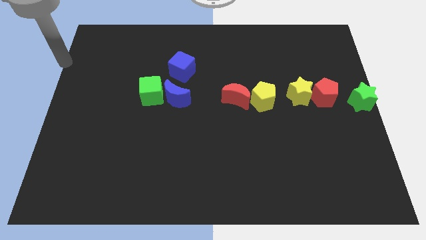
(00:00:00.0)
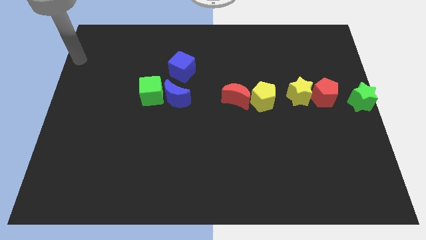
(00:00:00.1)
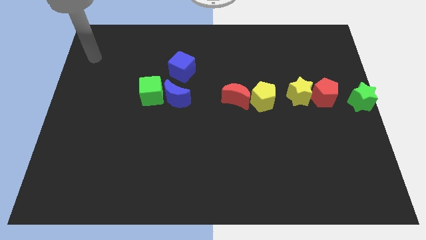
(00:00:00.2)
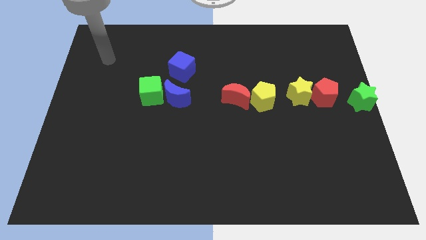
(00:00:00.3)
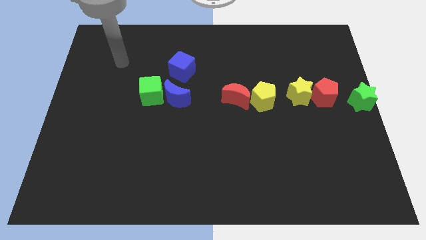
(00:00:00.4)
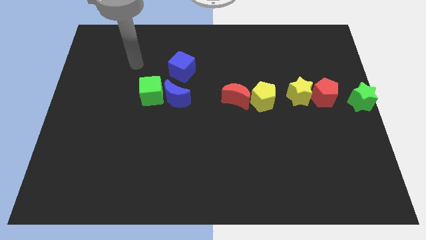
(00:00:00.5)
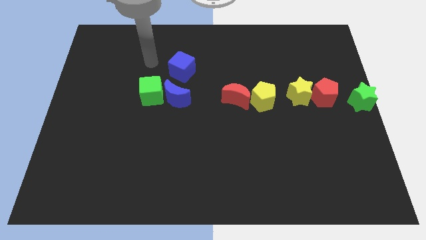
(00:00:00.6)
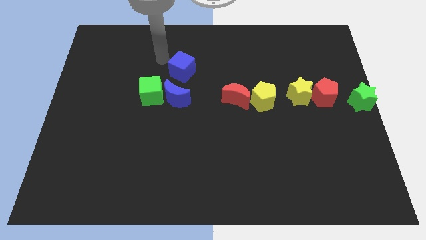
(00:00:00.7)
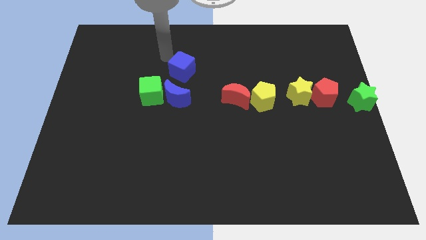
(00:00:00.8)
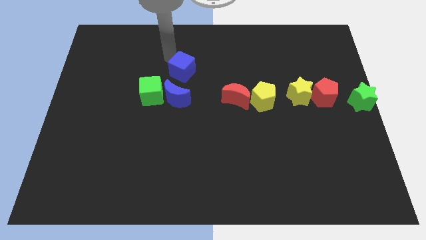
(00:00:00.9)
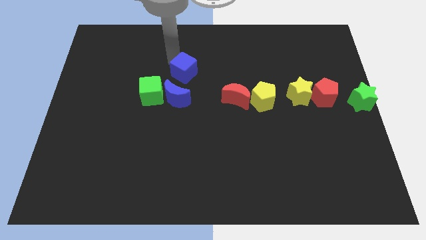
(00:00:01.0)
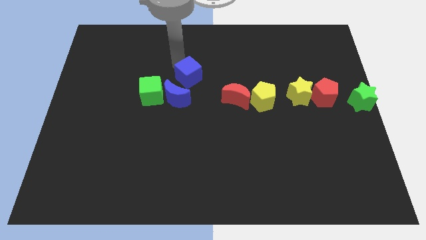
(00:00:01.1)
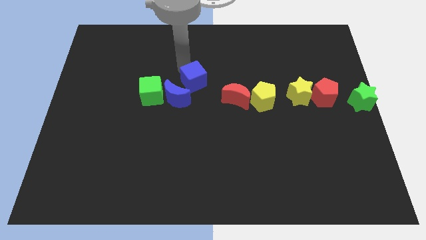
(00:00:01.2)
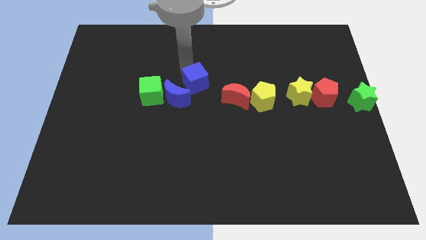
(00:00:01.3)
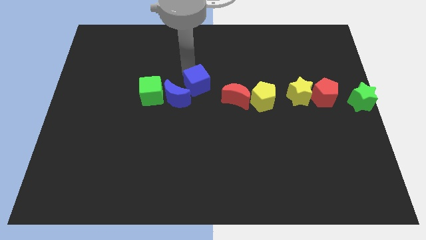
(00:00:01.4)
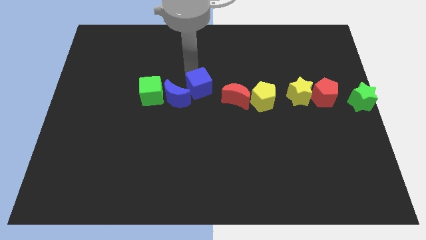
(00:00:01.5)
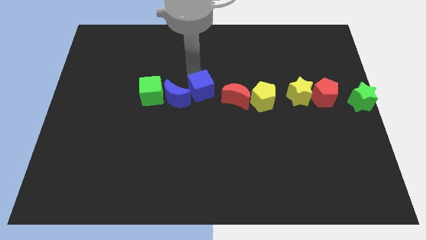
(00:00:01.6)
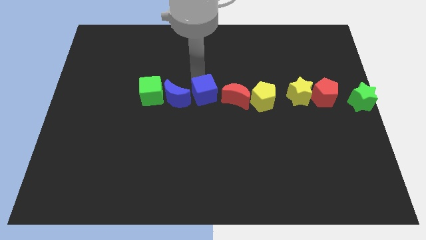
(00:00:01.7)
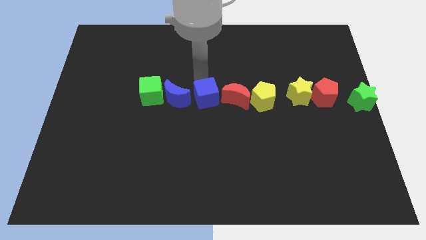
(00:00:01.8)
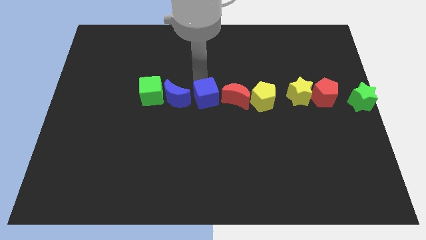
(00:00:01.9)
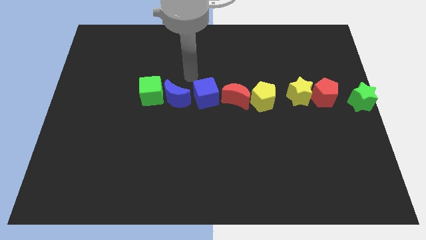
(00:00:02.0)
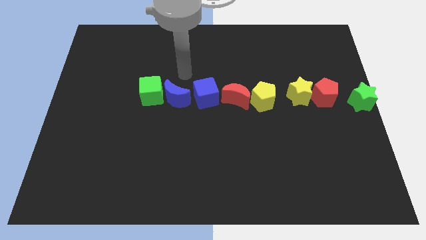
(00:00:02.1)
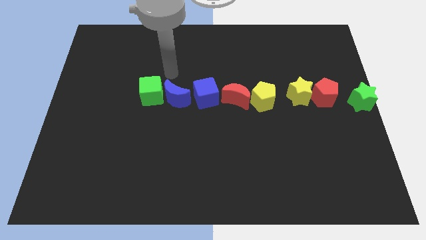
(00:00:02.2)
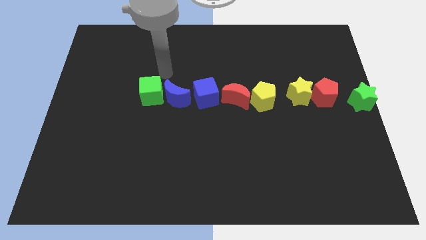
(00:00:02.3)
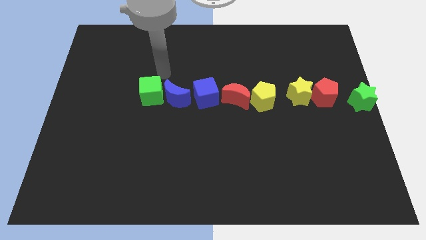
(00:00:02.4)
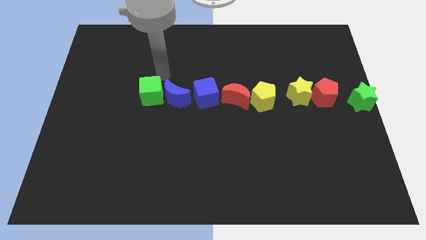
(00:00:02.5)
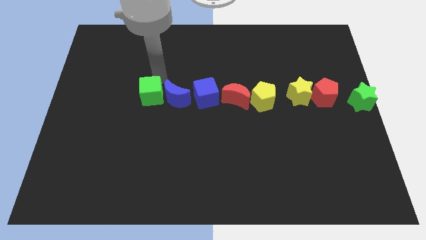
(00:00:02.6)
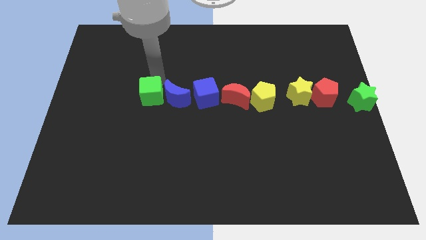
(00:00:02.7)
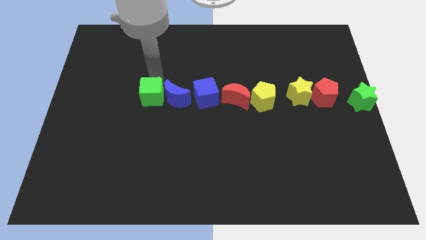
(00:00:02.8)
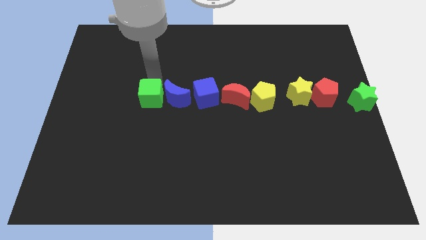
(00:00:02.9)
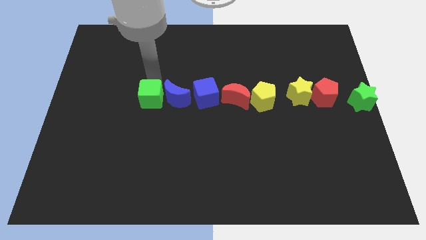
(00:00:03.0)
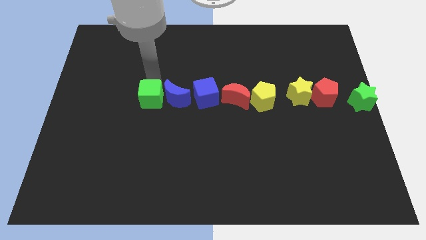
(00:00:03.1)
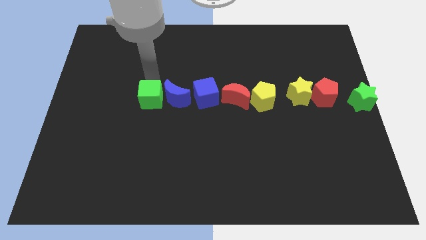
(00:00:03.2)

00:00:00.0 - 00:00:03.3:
place the blue cube in between blue moon and red moon

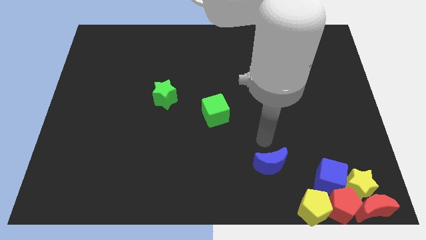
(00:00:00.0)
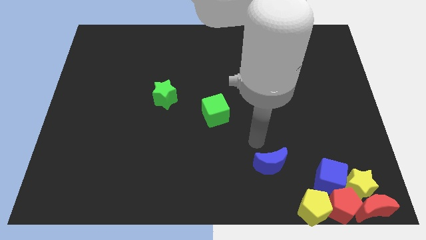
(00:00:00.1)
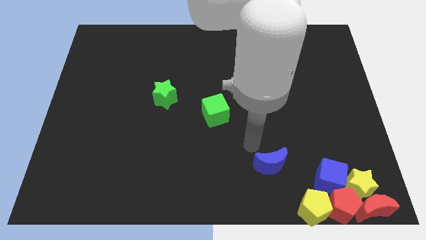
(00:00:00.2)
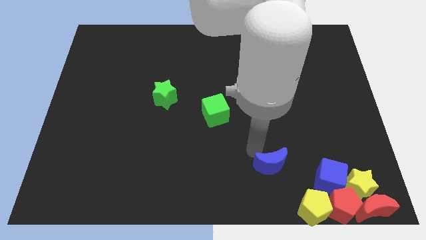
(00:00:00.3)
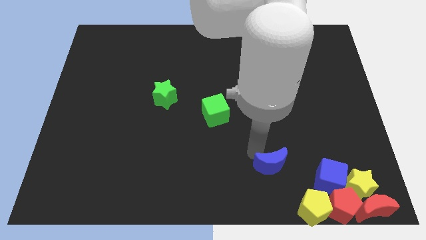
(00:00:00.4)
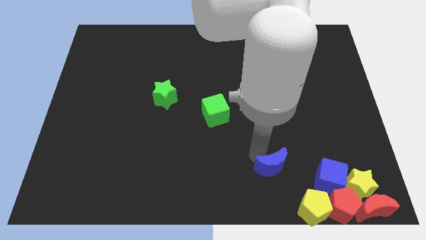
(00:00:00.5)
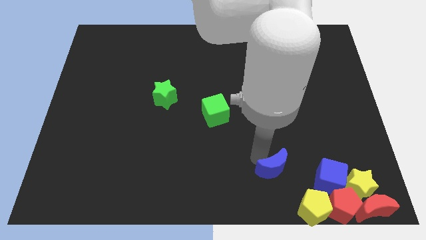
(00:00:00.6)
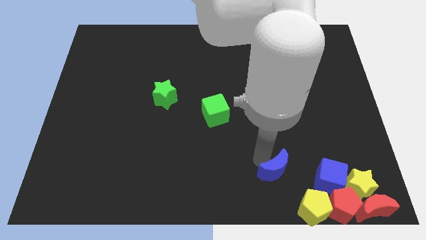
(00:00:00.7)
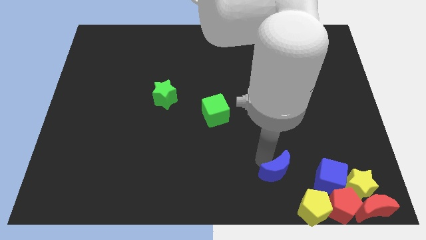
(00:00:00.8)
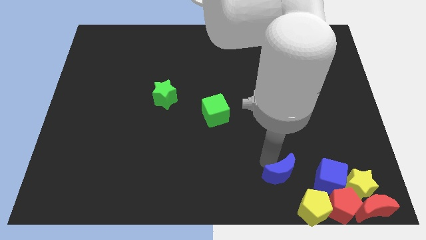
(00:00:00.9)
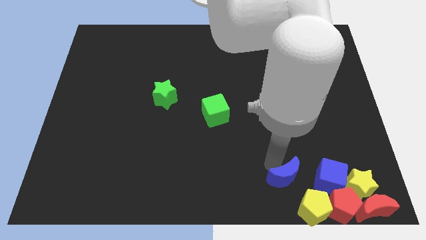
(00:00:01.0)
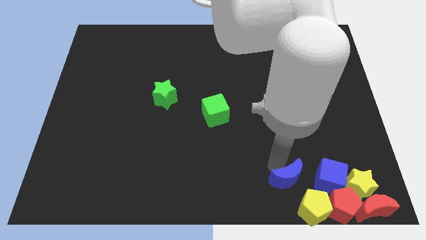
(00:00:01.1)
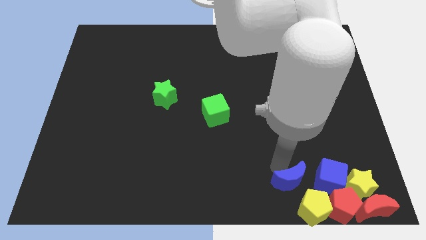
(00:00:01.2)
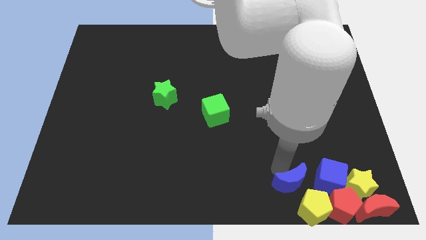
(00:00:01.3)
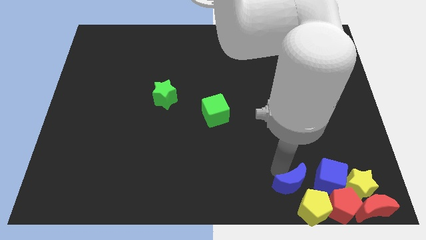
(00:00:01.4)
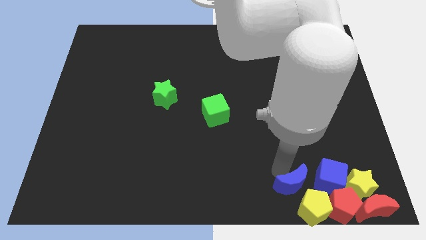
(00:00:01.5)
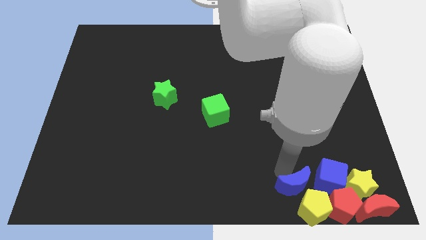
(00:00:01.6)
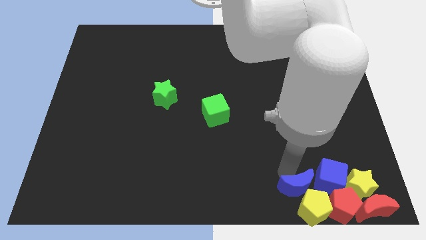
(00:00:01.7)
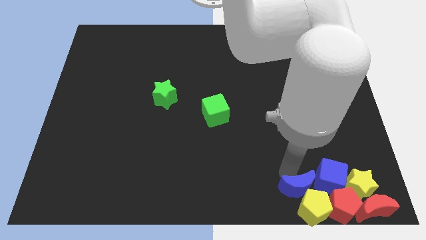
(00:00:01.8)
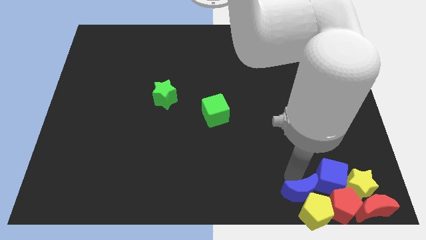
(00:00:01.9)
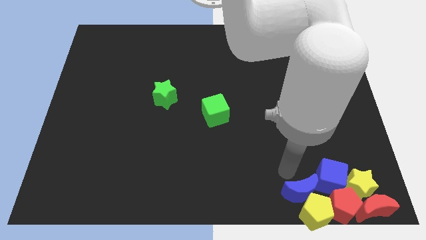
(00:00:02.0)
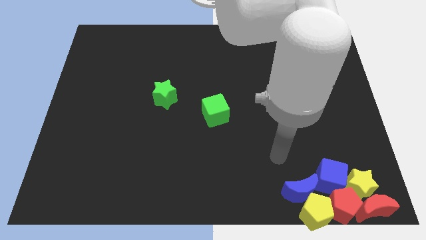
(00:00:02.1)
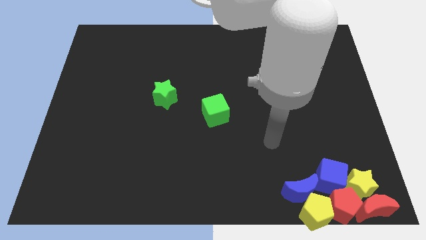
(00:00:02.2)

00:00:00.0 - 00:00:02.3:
push the blue moon into the yellow pentagon

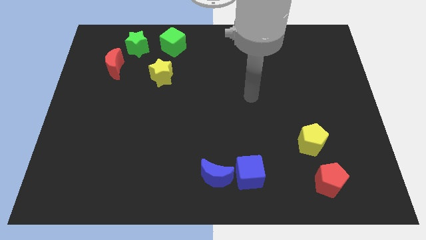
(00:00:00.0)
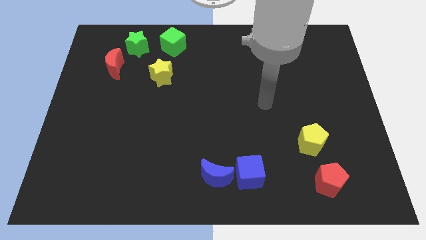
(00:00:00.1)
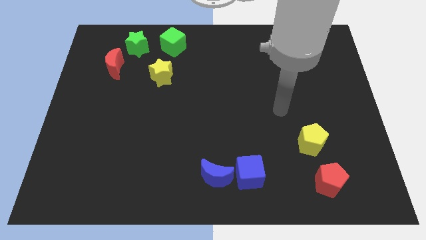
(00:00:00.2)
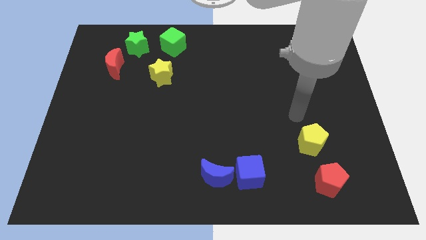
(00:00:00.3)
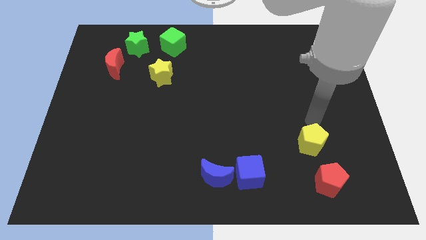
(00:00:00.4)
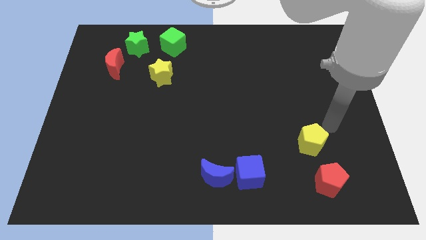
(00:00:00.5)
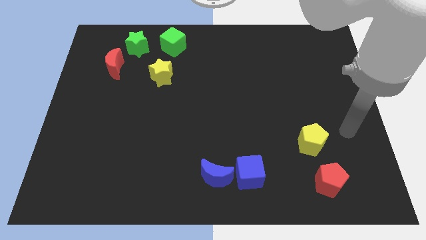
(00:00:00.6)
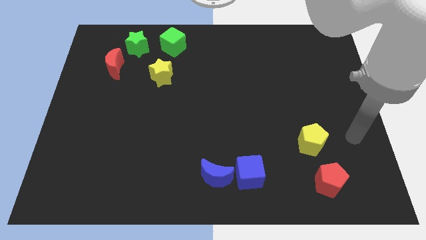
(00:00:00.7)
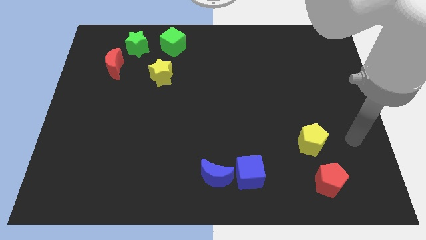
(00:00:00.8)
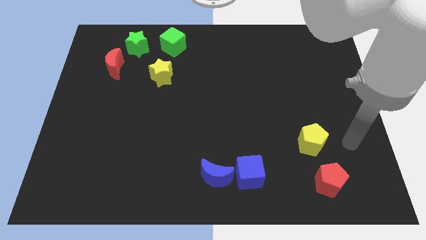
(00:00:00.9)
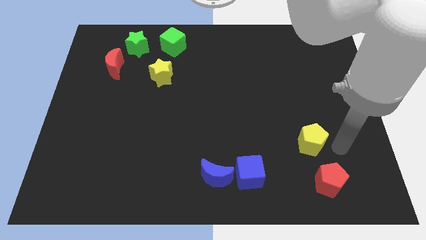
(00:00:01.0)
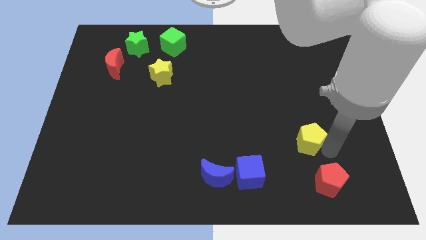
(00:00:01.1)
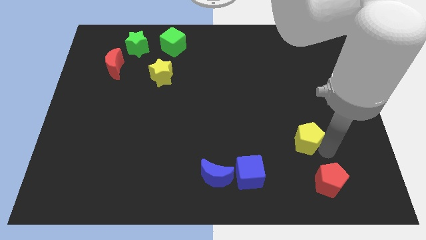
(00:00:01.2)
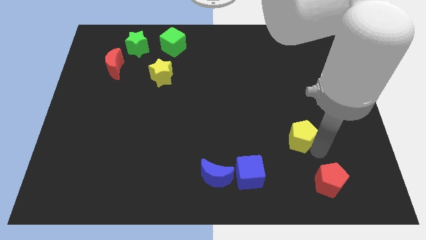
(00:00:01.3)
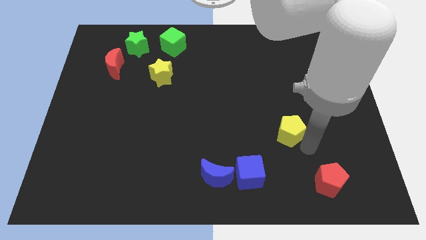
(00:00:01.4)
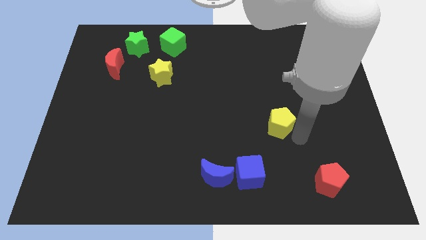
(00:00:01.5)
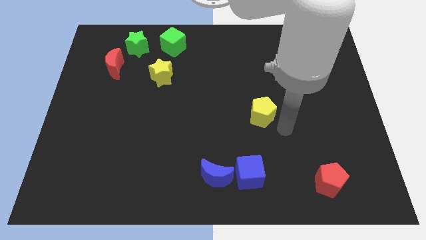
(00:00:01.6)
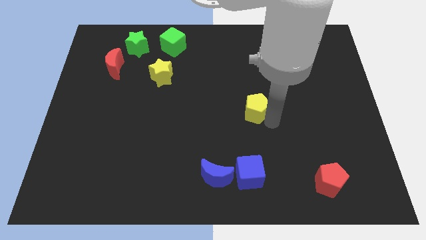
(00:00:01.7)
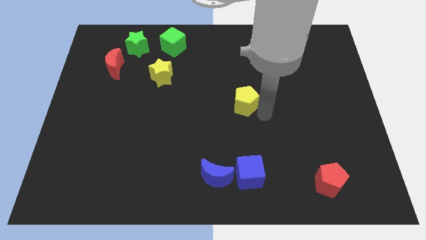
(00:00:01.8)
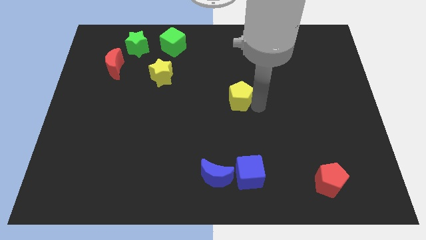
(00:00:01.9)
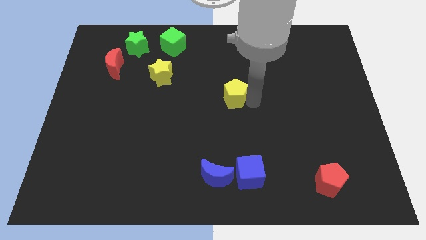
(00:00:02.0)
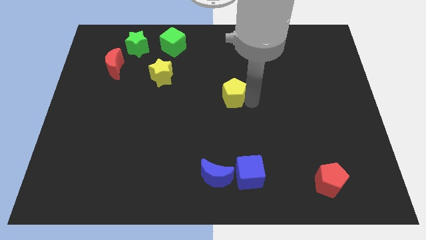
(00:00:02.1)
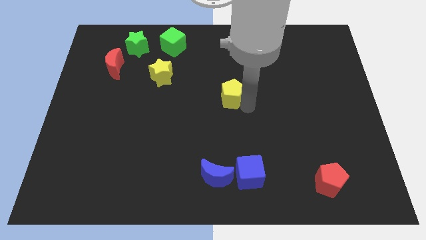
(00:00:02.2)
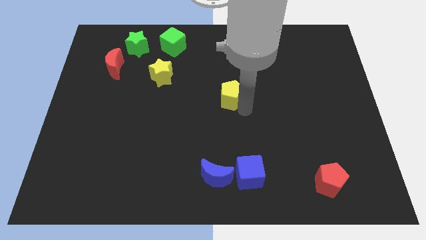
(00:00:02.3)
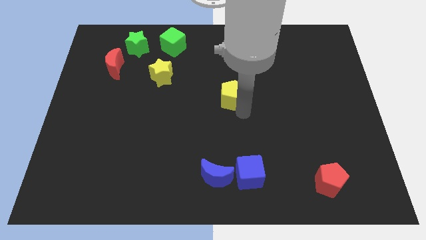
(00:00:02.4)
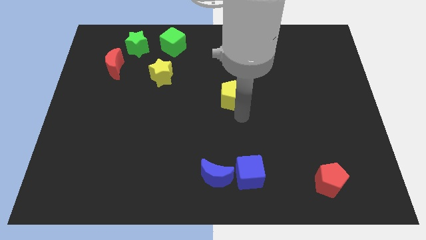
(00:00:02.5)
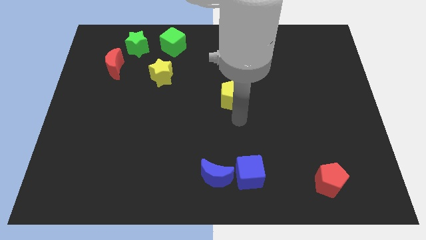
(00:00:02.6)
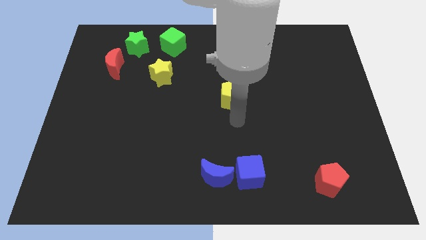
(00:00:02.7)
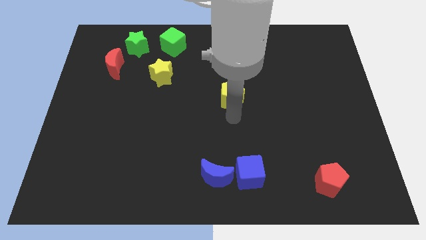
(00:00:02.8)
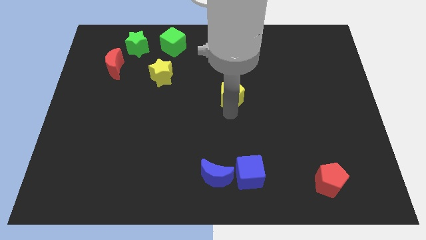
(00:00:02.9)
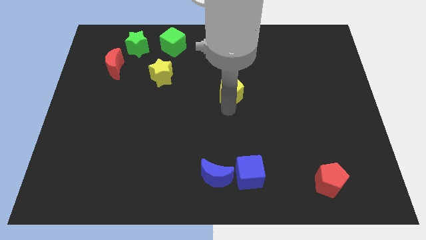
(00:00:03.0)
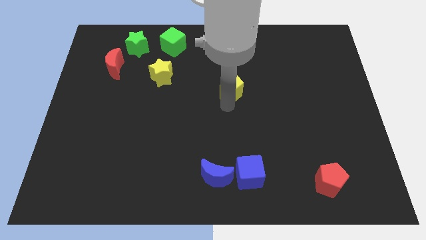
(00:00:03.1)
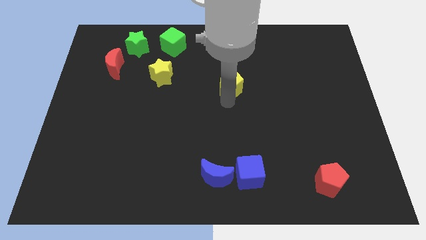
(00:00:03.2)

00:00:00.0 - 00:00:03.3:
place the yellow pentagon at the center of the board
